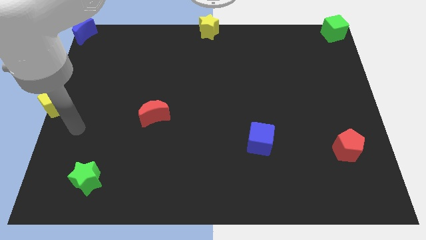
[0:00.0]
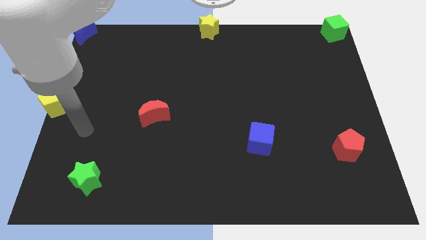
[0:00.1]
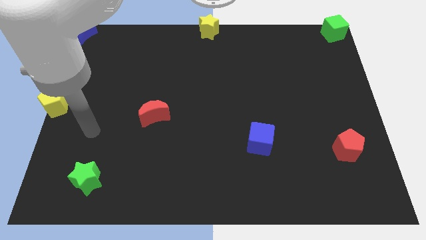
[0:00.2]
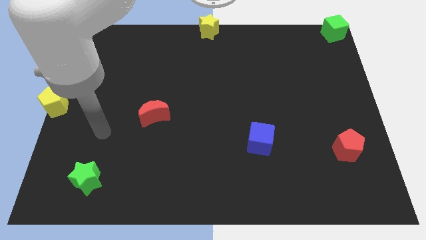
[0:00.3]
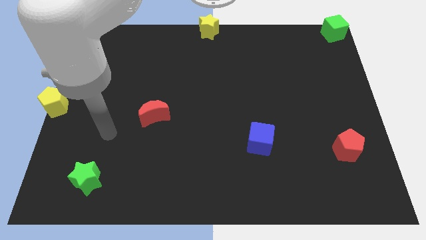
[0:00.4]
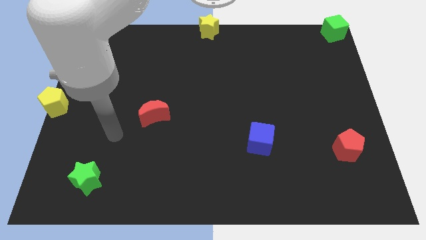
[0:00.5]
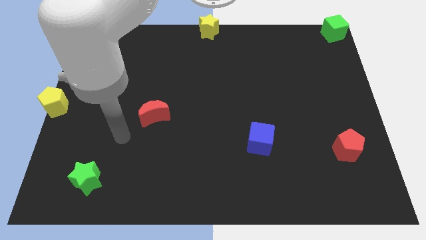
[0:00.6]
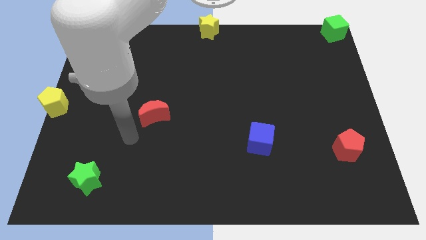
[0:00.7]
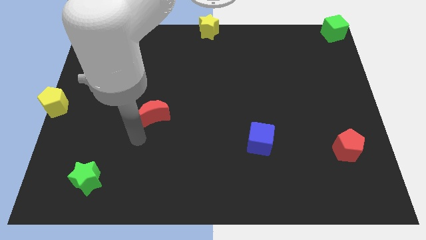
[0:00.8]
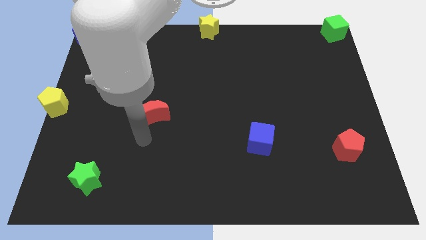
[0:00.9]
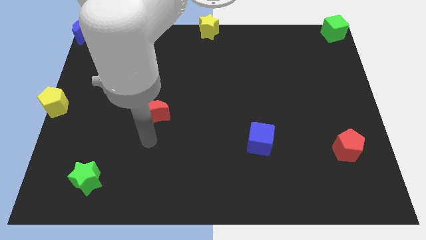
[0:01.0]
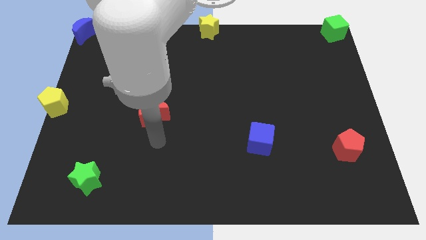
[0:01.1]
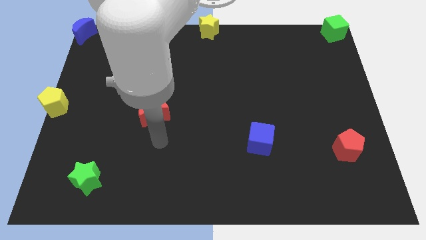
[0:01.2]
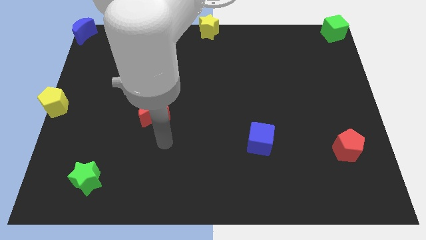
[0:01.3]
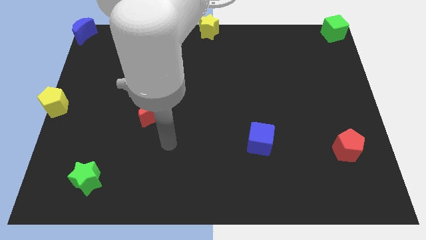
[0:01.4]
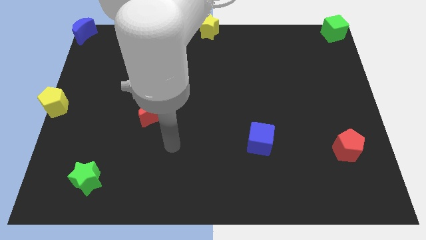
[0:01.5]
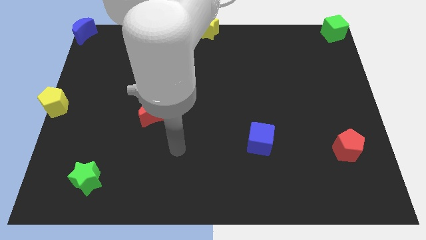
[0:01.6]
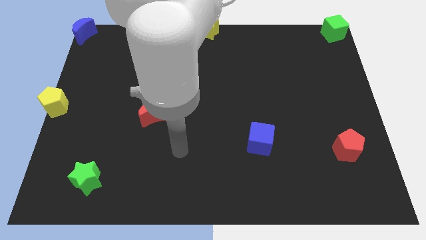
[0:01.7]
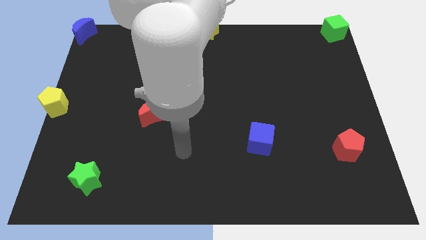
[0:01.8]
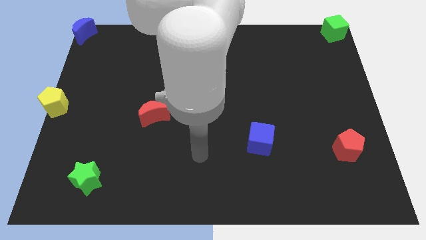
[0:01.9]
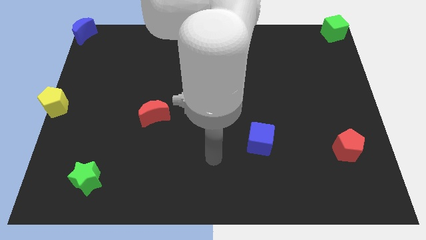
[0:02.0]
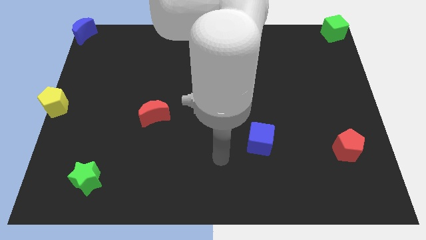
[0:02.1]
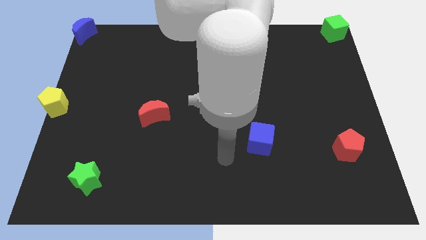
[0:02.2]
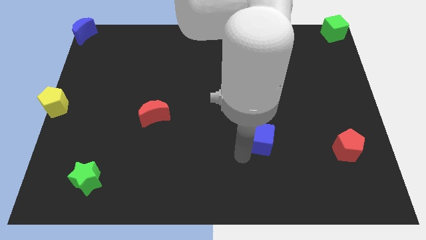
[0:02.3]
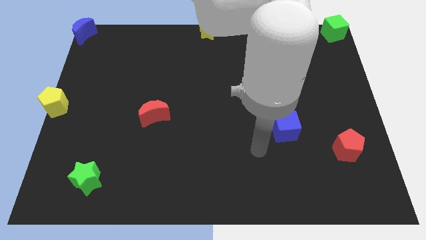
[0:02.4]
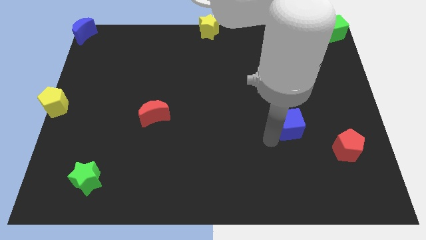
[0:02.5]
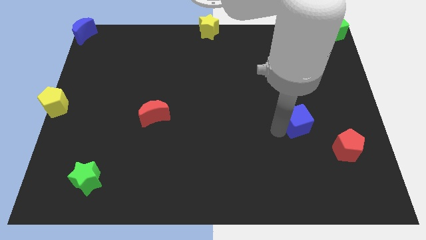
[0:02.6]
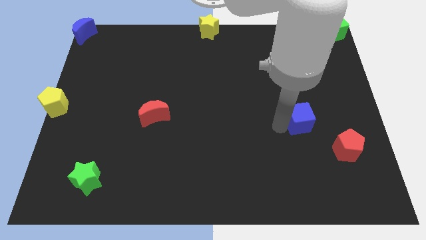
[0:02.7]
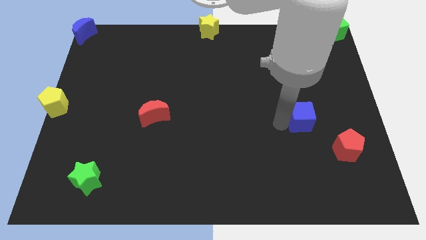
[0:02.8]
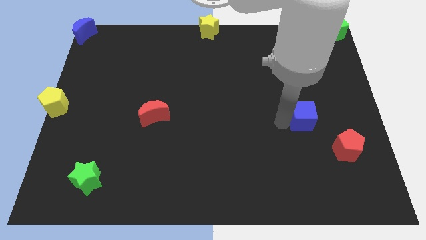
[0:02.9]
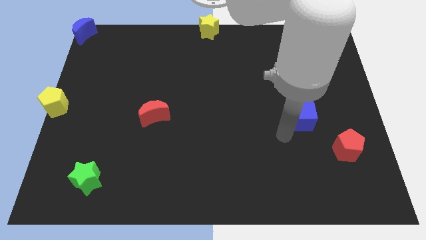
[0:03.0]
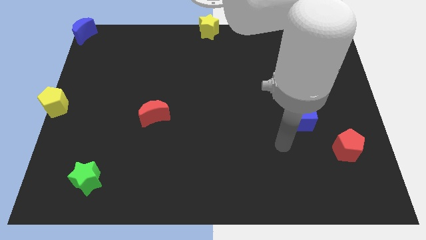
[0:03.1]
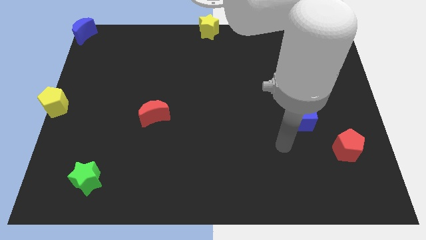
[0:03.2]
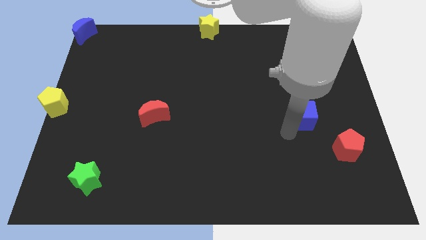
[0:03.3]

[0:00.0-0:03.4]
place the blue cube diagonally top left to the red pentagon

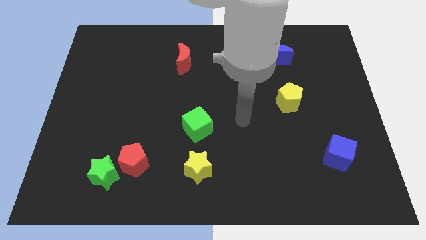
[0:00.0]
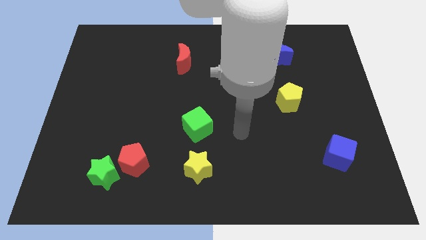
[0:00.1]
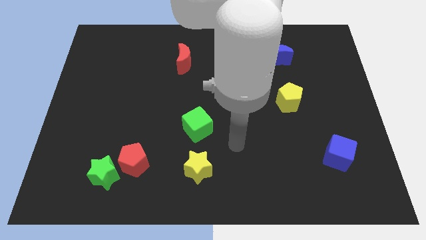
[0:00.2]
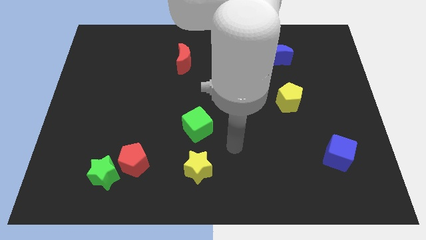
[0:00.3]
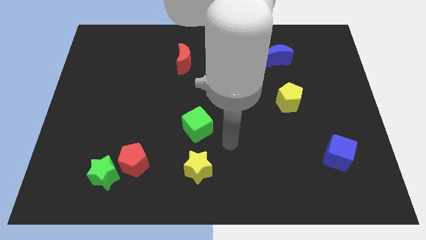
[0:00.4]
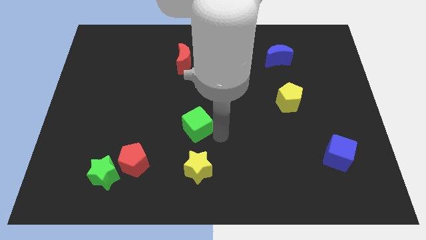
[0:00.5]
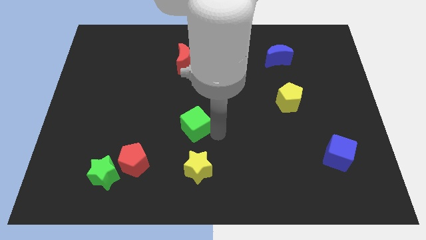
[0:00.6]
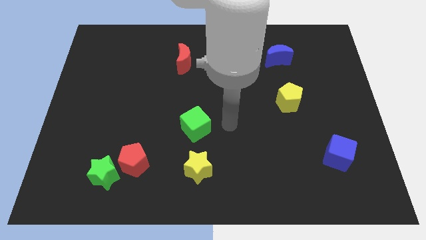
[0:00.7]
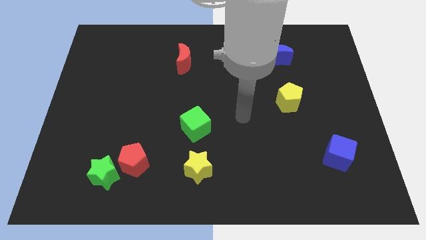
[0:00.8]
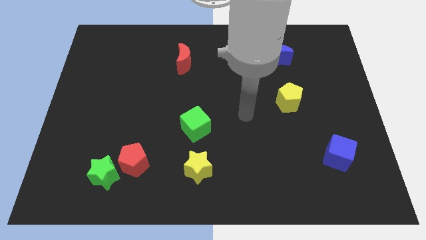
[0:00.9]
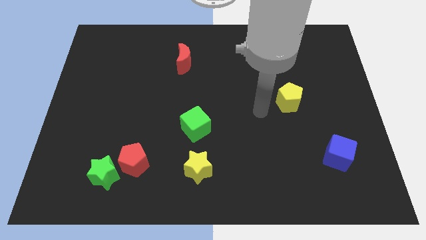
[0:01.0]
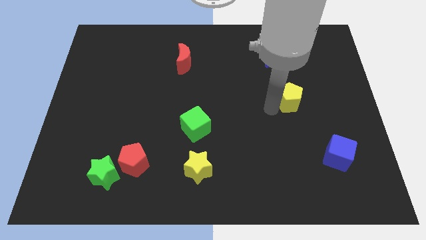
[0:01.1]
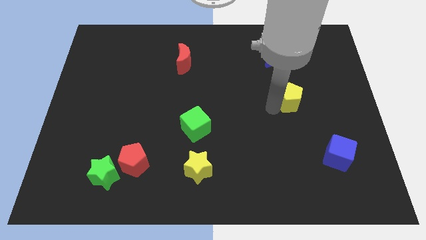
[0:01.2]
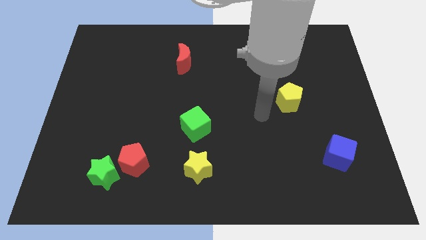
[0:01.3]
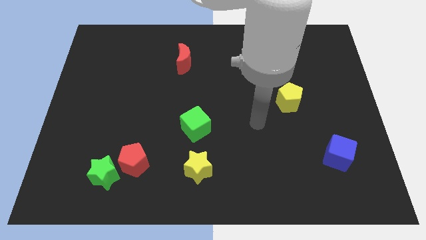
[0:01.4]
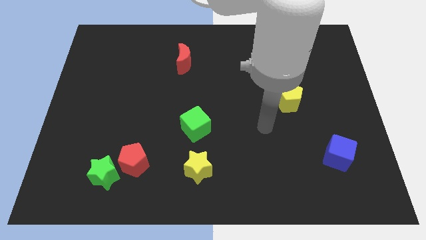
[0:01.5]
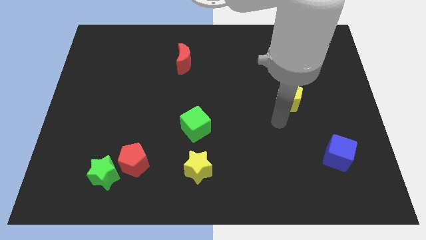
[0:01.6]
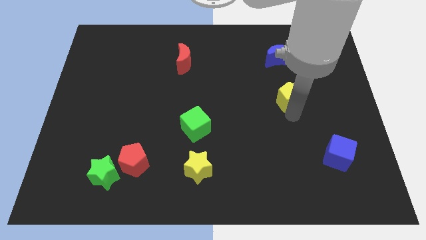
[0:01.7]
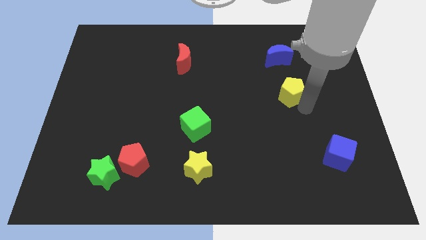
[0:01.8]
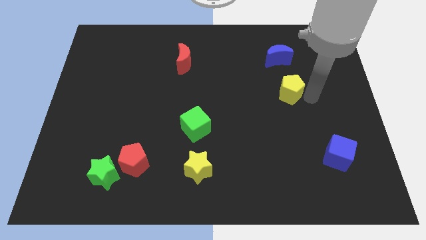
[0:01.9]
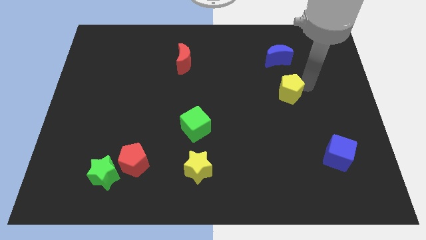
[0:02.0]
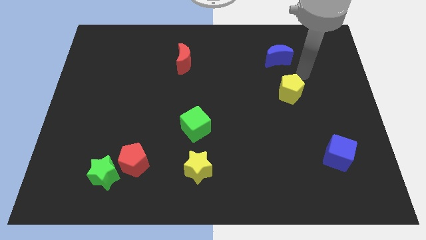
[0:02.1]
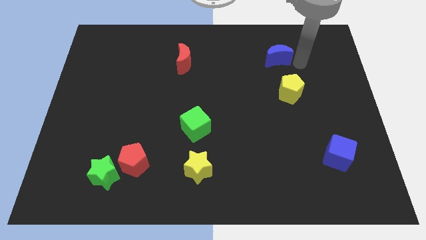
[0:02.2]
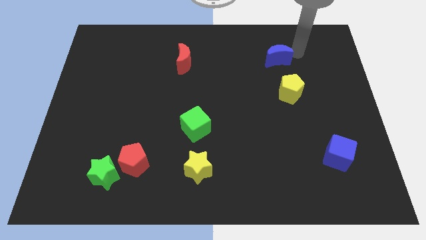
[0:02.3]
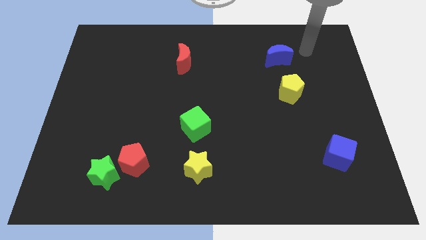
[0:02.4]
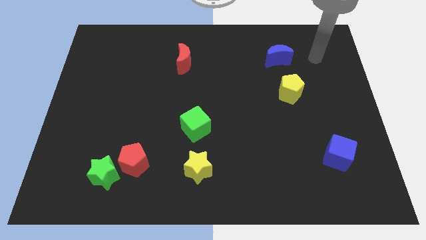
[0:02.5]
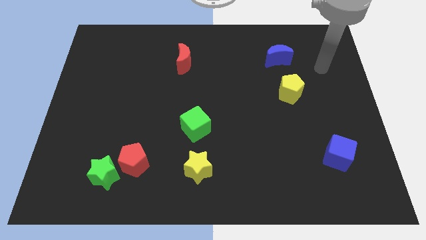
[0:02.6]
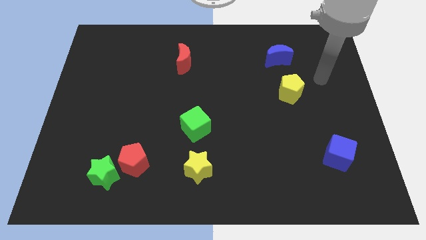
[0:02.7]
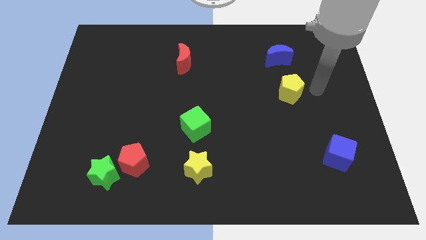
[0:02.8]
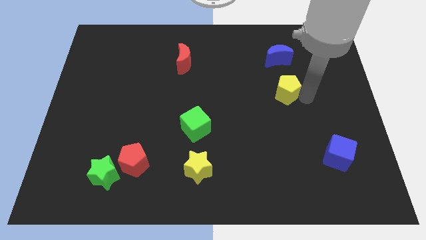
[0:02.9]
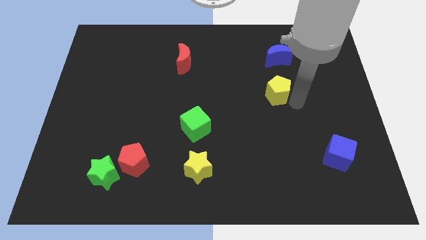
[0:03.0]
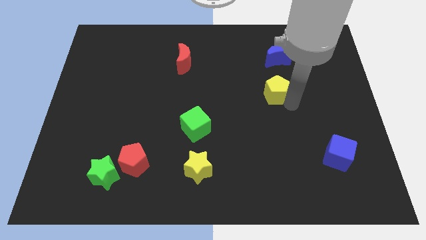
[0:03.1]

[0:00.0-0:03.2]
move the yellow pentagon below to the blue moon

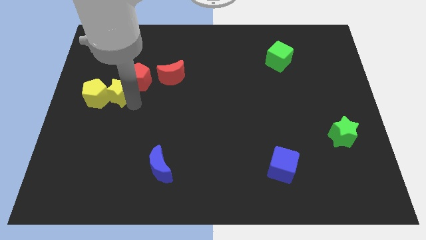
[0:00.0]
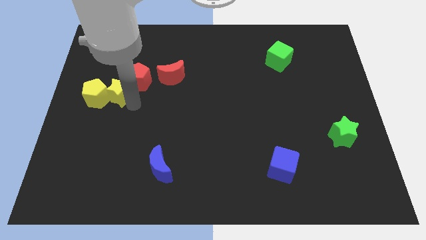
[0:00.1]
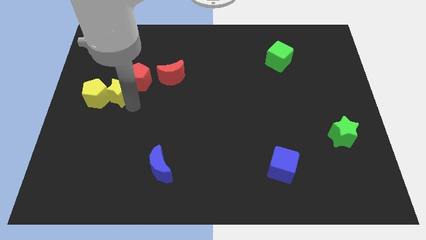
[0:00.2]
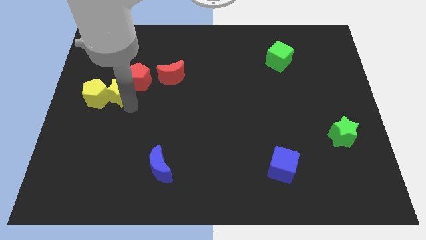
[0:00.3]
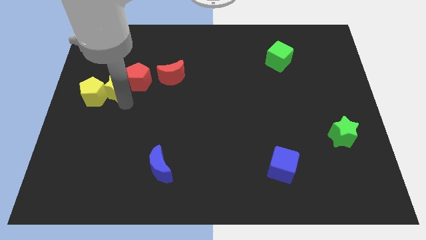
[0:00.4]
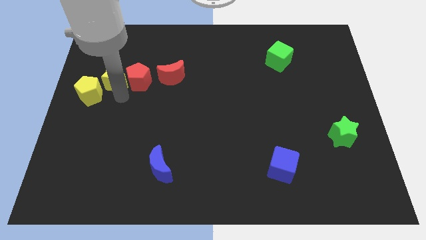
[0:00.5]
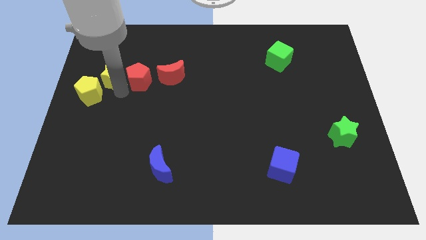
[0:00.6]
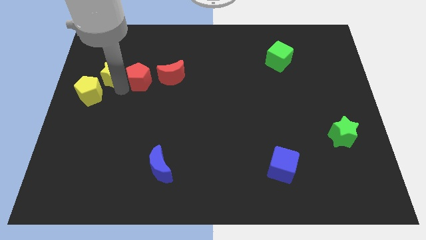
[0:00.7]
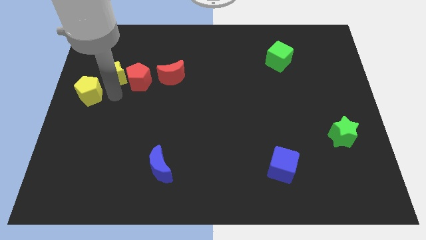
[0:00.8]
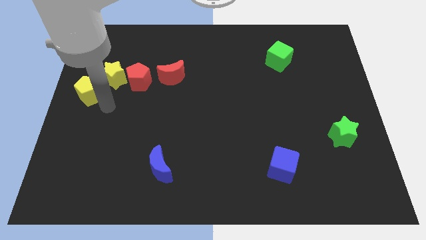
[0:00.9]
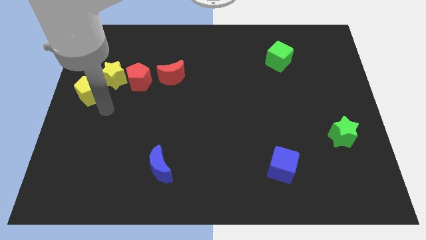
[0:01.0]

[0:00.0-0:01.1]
move the yellow star to the left of red pentagon

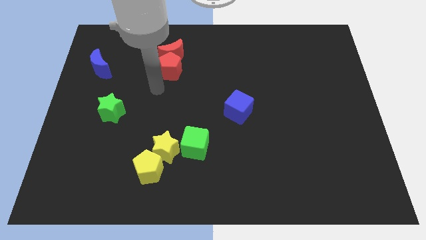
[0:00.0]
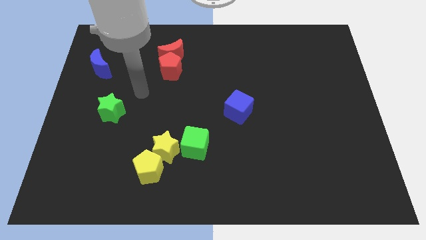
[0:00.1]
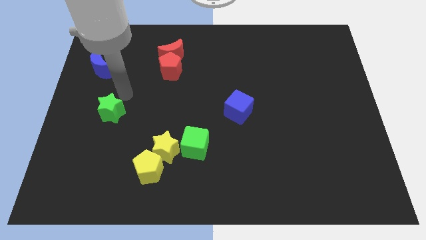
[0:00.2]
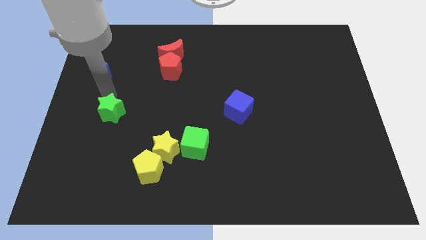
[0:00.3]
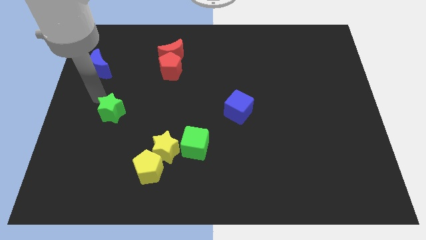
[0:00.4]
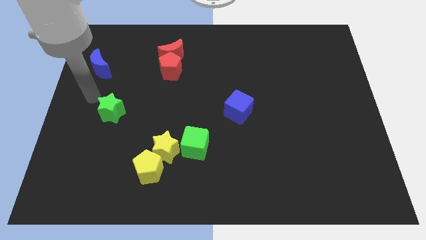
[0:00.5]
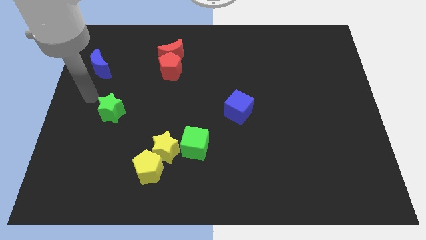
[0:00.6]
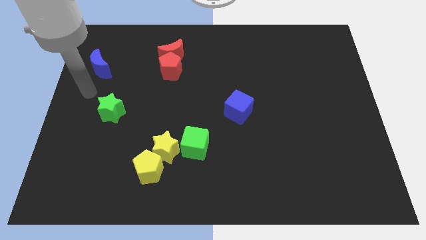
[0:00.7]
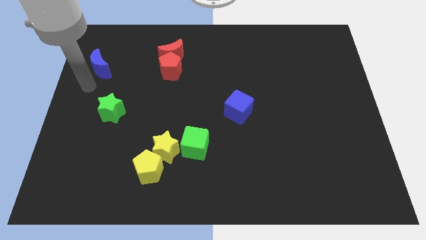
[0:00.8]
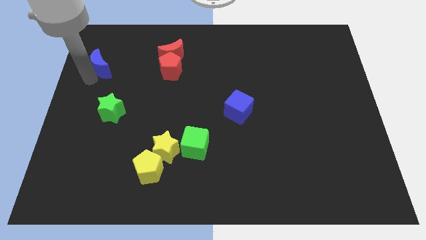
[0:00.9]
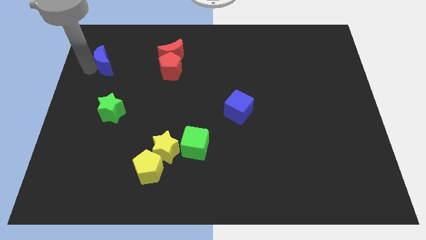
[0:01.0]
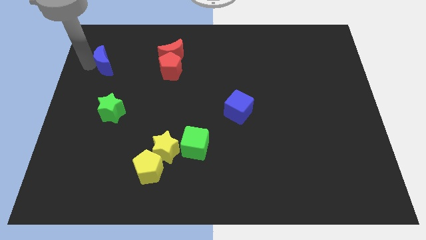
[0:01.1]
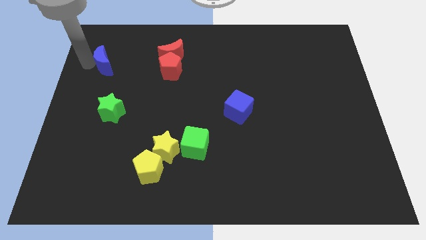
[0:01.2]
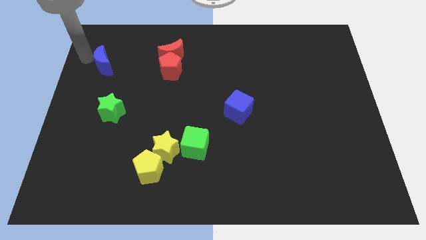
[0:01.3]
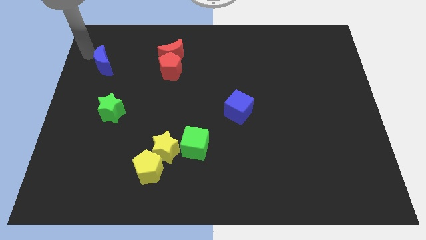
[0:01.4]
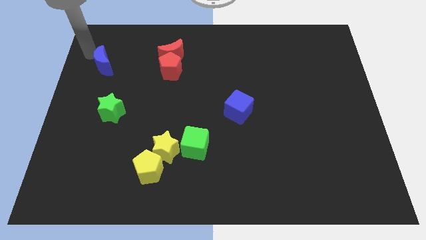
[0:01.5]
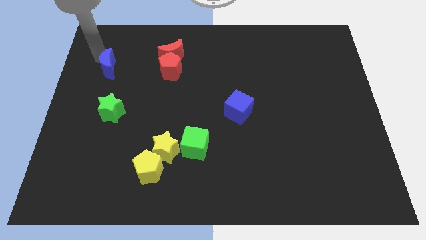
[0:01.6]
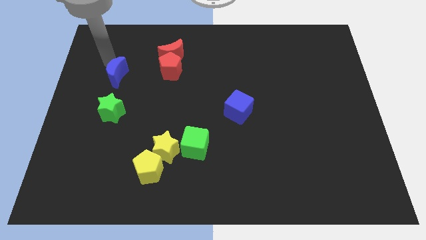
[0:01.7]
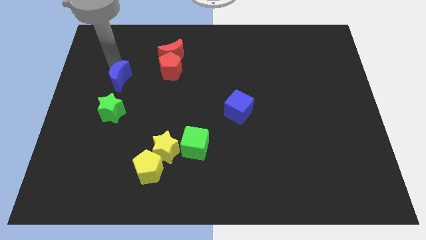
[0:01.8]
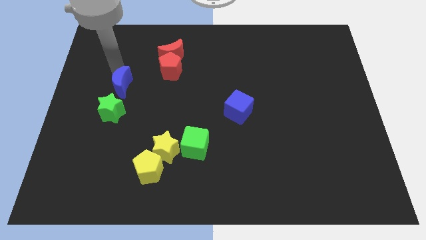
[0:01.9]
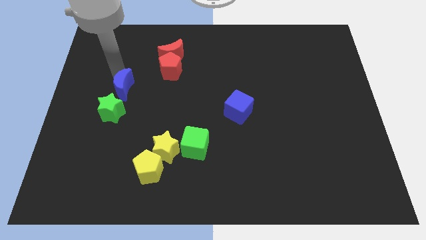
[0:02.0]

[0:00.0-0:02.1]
push the blue moon on top of green star
